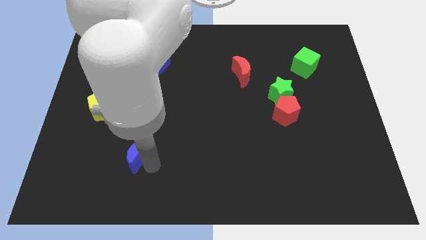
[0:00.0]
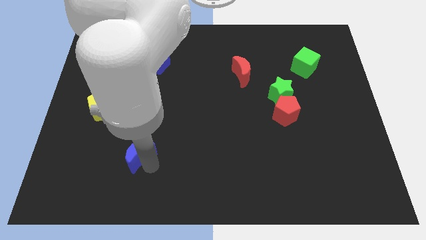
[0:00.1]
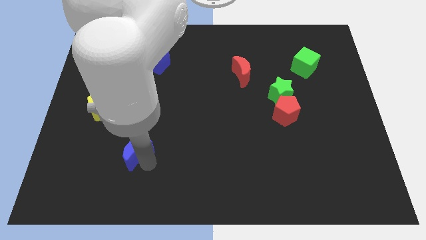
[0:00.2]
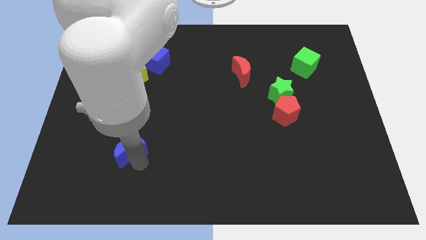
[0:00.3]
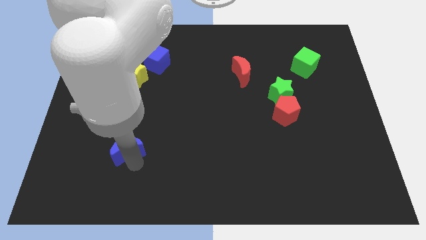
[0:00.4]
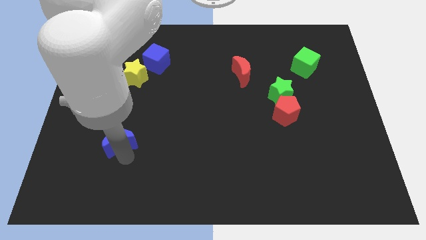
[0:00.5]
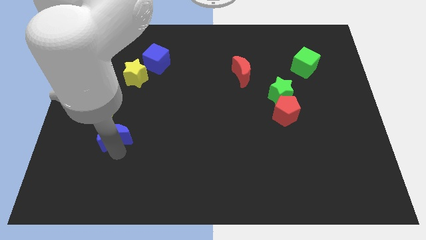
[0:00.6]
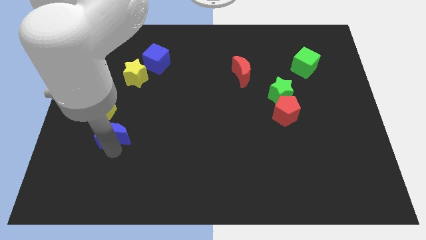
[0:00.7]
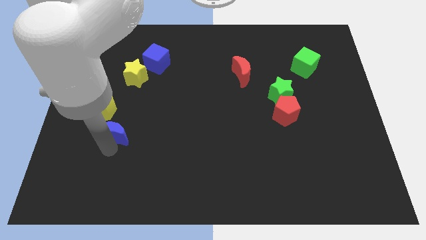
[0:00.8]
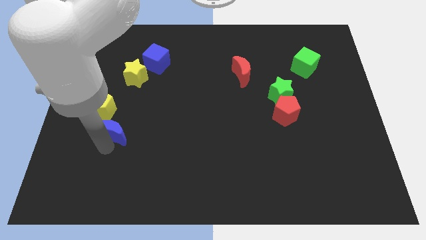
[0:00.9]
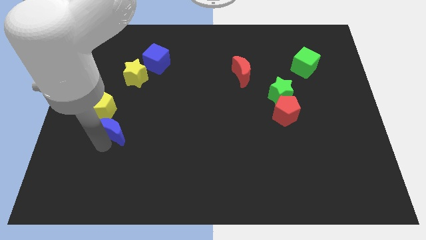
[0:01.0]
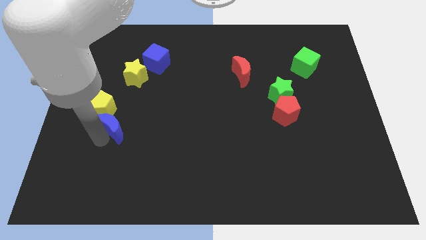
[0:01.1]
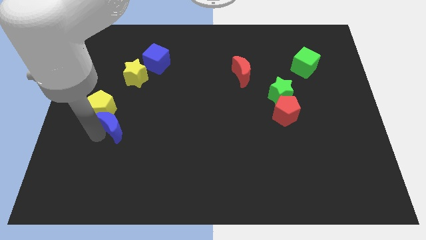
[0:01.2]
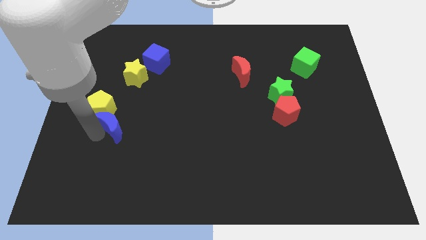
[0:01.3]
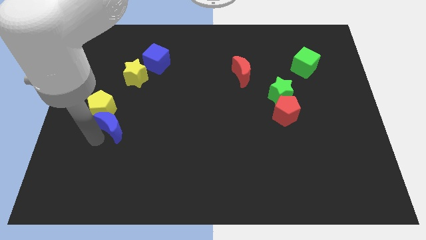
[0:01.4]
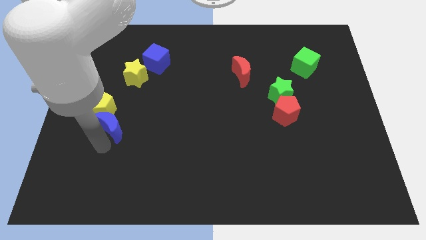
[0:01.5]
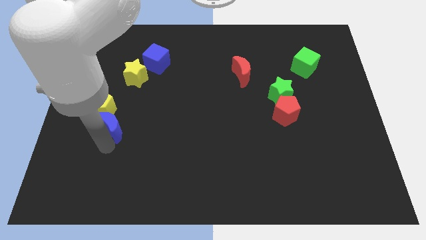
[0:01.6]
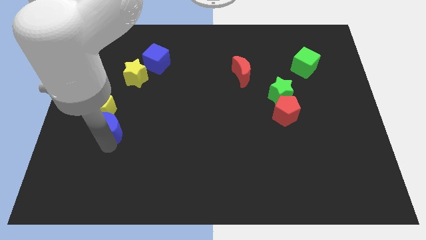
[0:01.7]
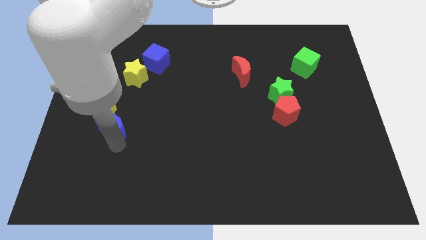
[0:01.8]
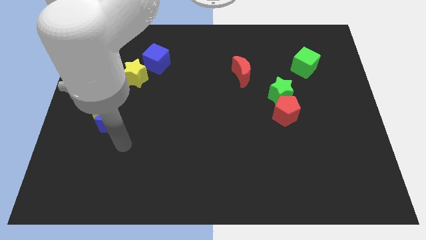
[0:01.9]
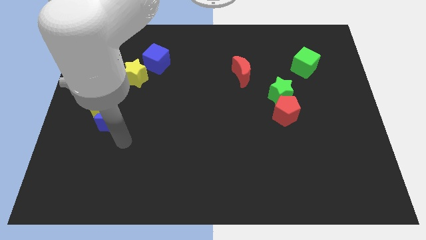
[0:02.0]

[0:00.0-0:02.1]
place the blue moon to the bottom of the yellow pentagon

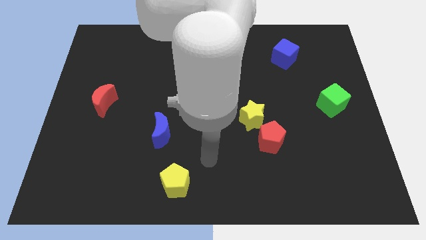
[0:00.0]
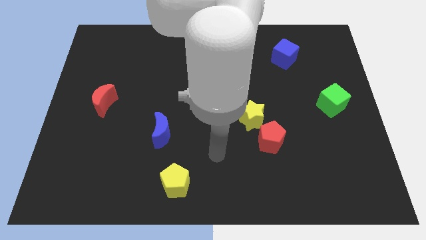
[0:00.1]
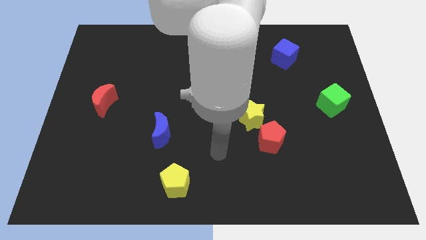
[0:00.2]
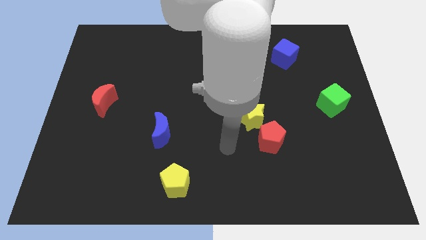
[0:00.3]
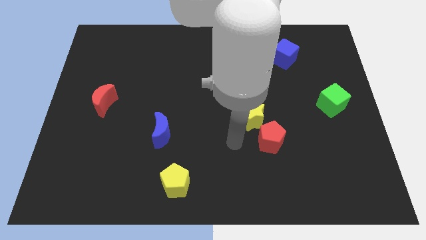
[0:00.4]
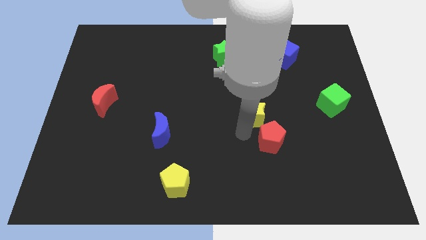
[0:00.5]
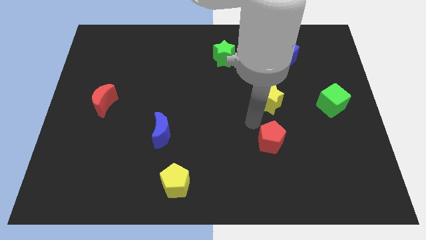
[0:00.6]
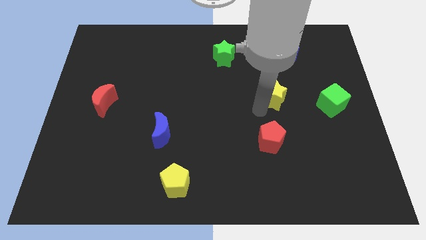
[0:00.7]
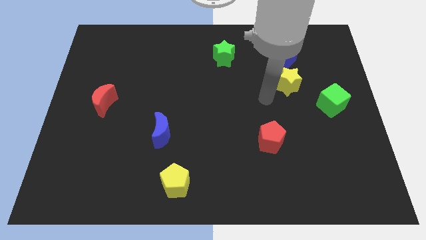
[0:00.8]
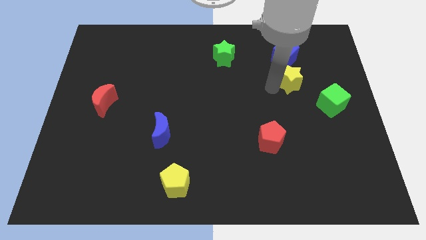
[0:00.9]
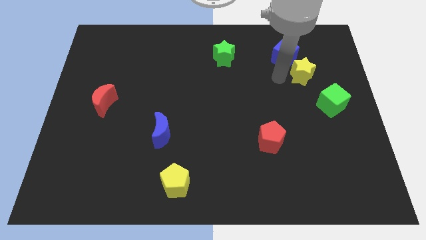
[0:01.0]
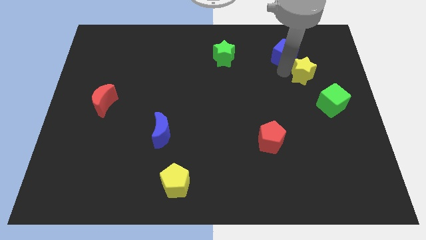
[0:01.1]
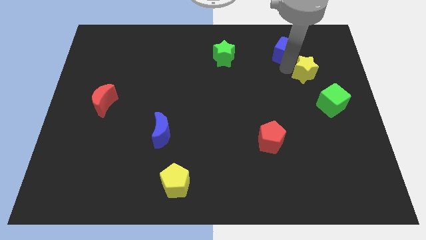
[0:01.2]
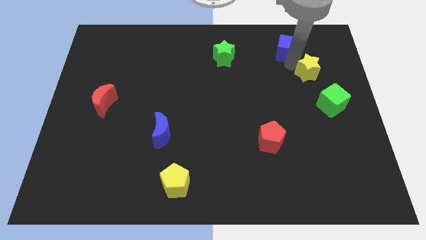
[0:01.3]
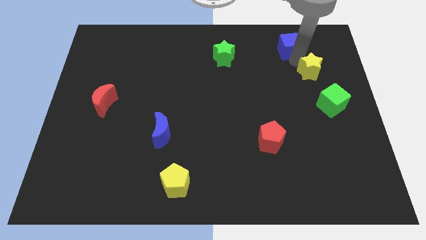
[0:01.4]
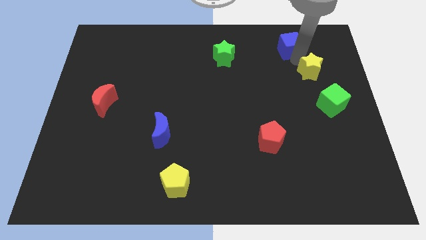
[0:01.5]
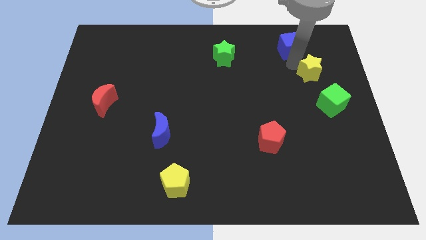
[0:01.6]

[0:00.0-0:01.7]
drag the yellow star and place it in between the green cube and blue cube

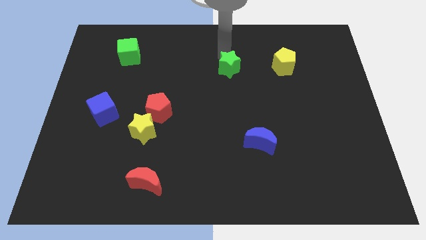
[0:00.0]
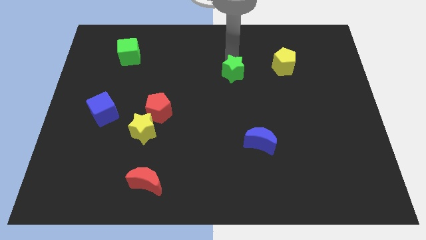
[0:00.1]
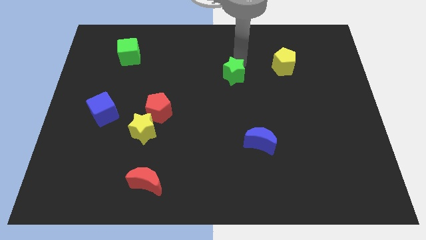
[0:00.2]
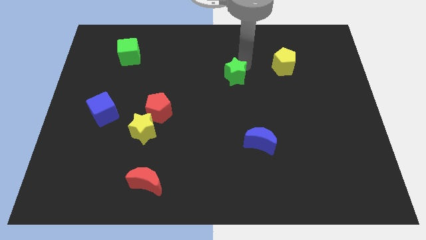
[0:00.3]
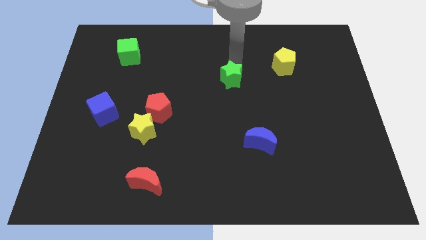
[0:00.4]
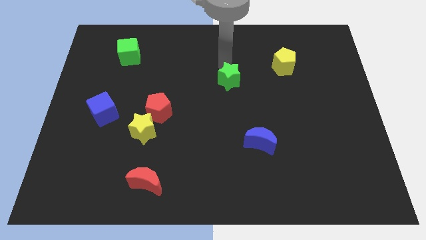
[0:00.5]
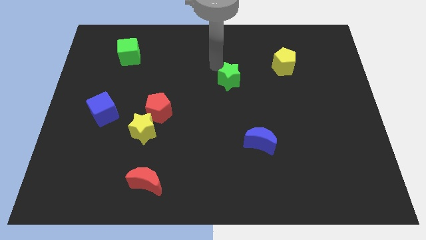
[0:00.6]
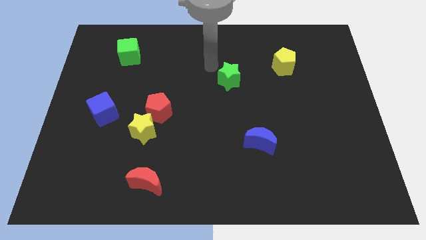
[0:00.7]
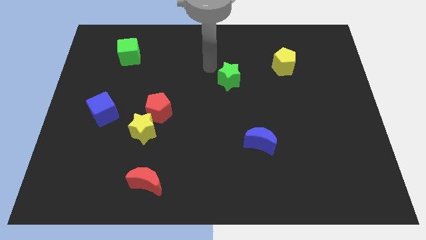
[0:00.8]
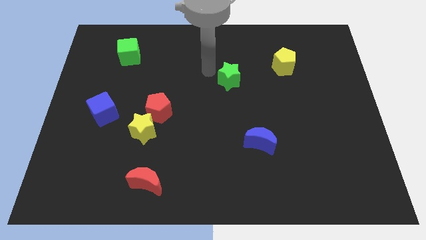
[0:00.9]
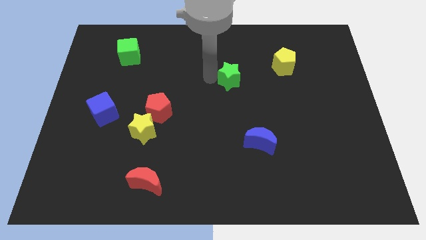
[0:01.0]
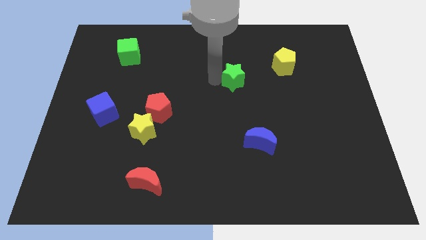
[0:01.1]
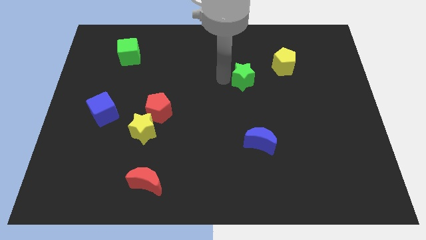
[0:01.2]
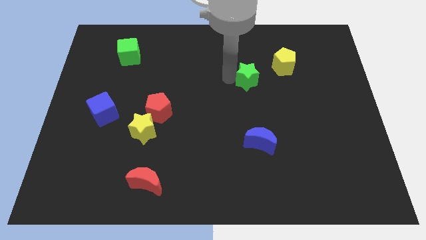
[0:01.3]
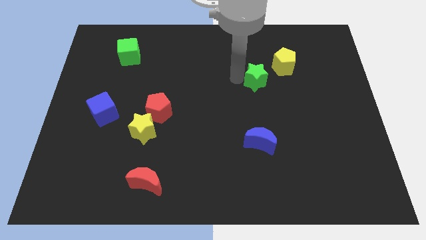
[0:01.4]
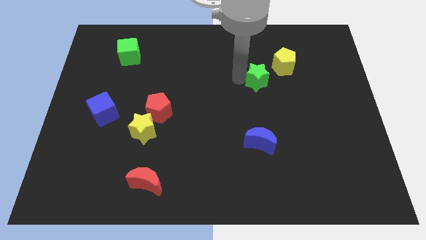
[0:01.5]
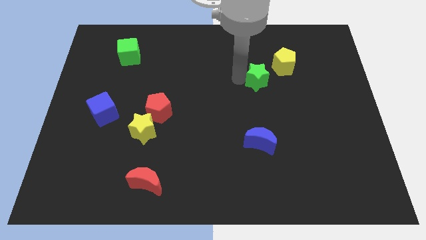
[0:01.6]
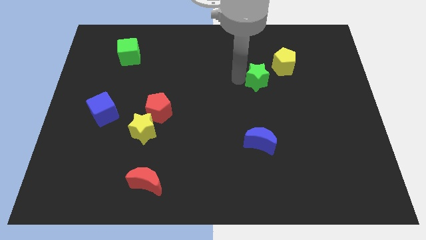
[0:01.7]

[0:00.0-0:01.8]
slide the green star parallel above the blue moon

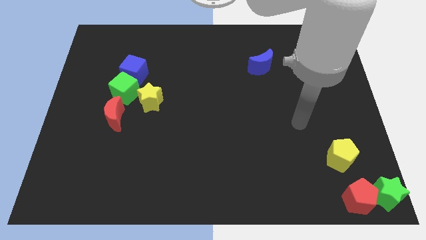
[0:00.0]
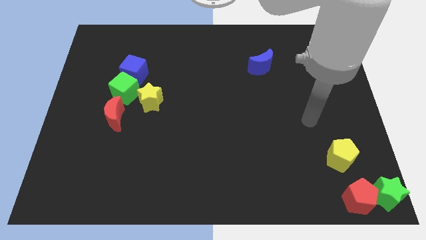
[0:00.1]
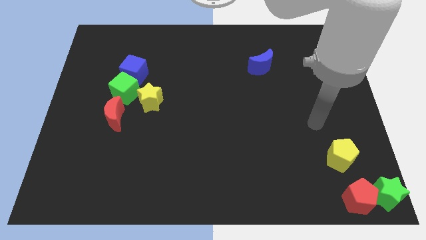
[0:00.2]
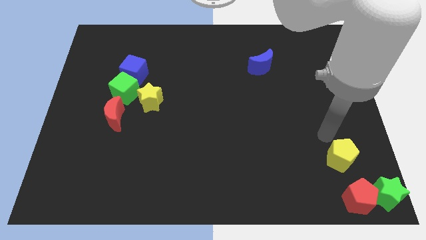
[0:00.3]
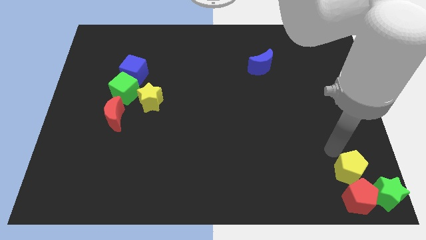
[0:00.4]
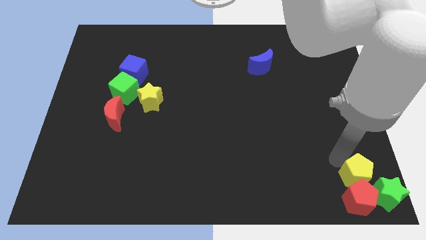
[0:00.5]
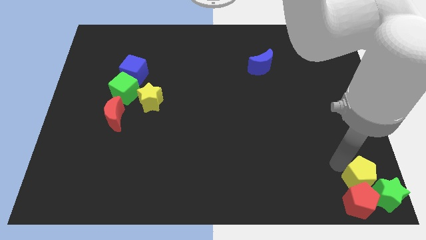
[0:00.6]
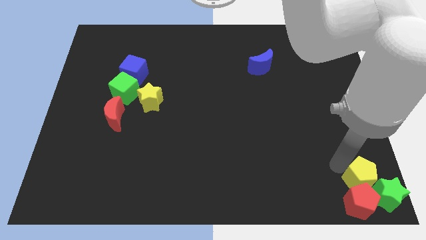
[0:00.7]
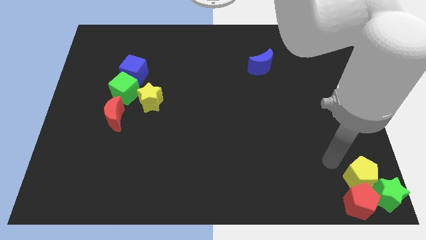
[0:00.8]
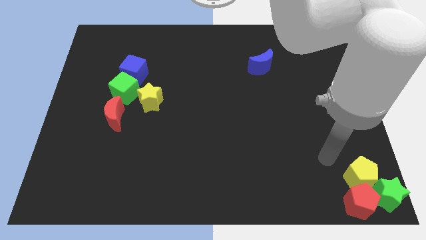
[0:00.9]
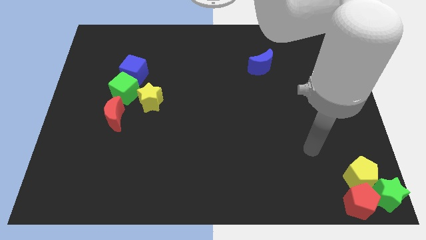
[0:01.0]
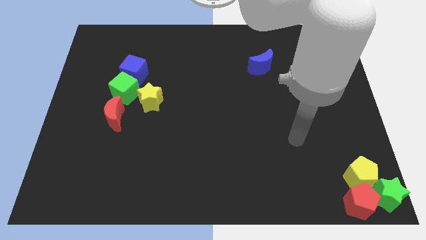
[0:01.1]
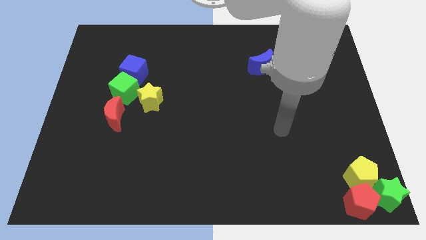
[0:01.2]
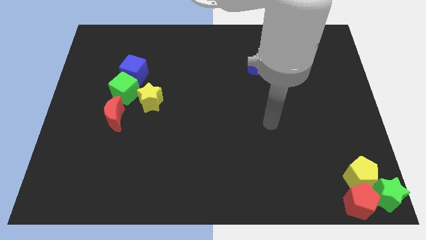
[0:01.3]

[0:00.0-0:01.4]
push the yellow pentagon into the green star

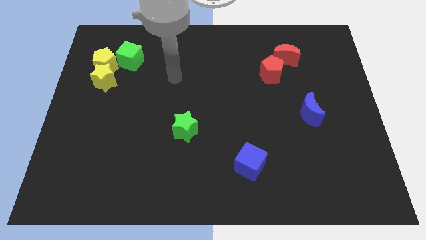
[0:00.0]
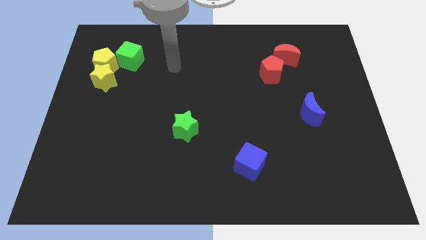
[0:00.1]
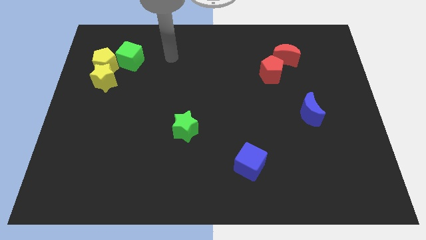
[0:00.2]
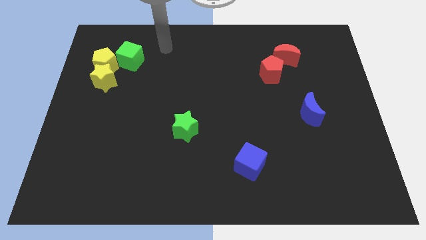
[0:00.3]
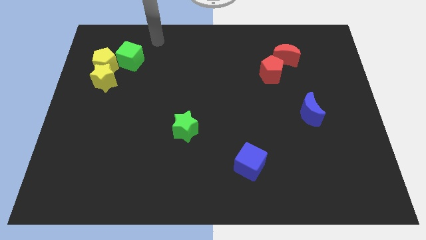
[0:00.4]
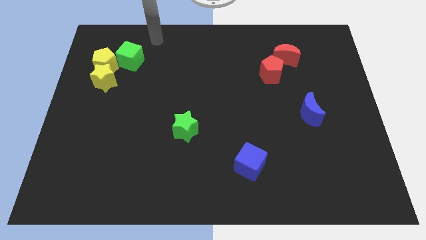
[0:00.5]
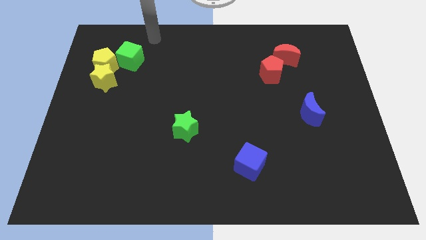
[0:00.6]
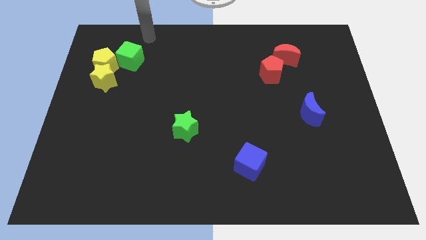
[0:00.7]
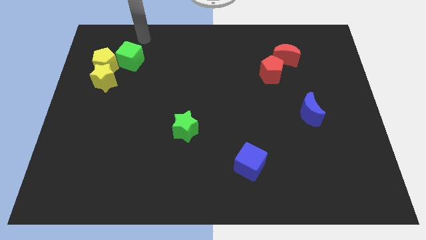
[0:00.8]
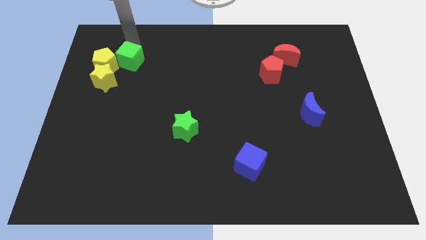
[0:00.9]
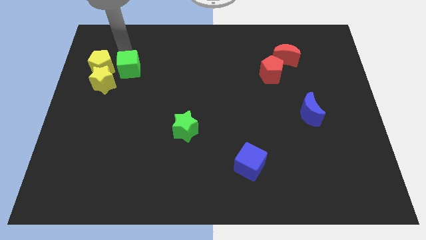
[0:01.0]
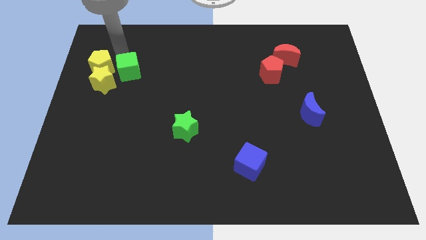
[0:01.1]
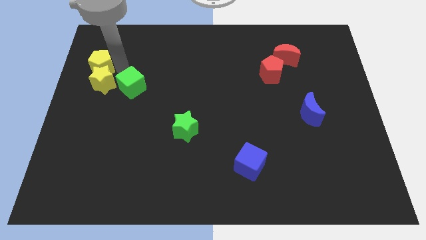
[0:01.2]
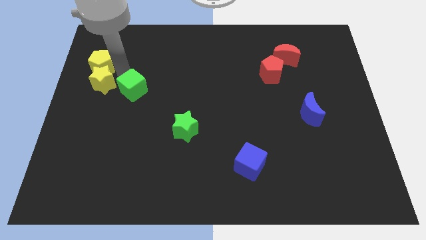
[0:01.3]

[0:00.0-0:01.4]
push the green cube to the right of the yellow star

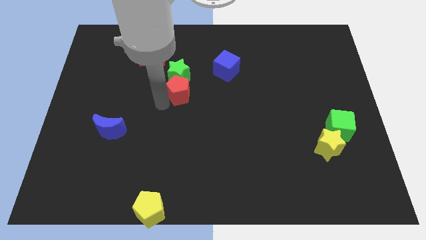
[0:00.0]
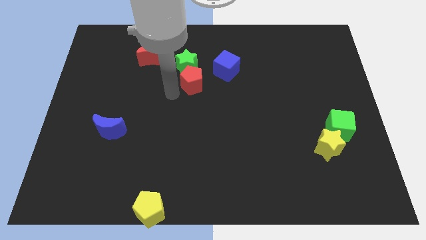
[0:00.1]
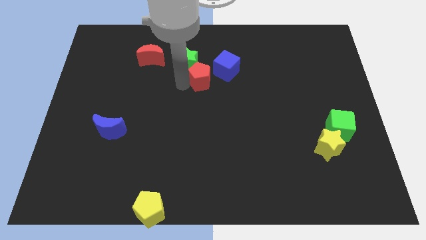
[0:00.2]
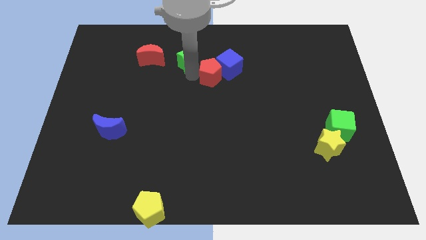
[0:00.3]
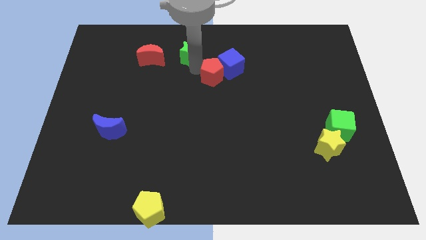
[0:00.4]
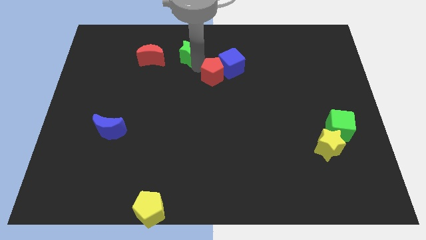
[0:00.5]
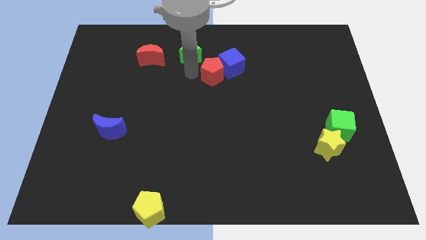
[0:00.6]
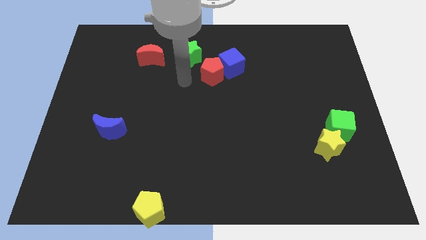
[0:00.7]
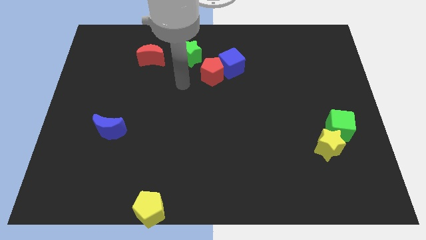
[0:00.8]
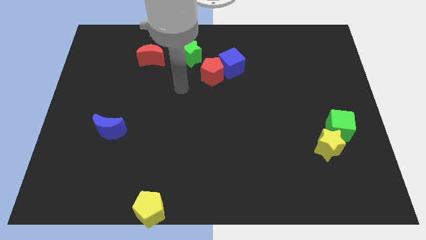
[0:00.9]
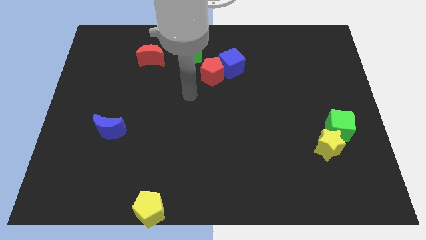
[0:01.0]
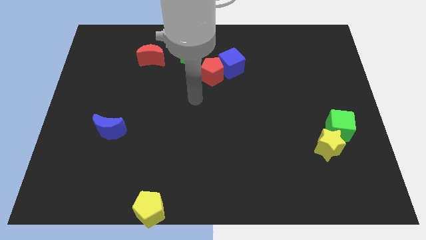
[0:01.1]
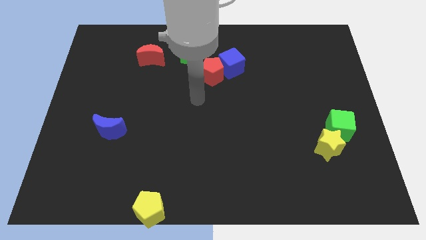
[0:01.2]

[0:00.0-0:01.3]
push the red pentagon into the blue cube
